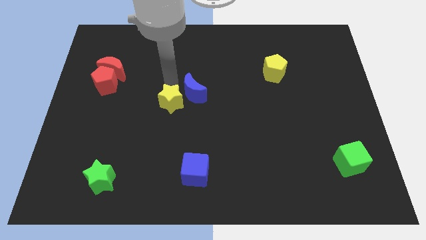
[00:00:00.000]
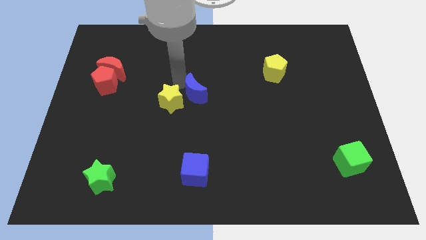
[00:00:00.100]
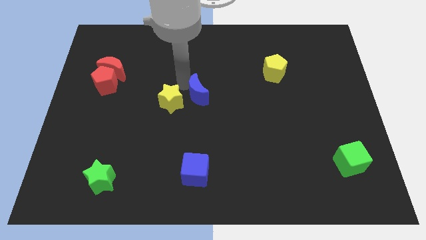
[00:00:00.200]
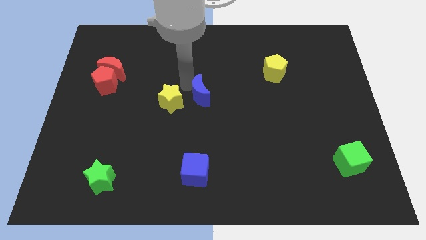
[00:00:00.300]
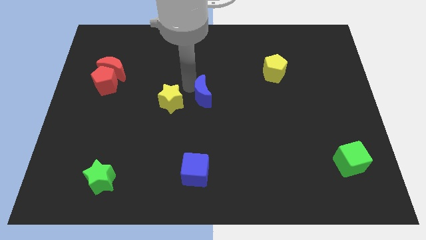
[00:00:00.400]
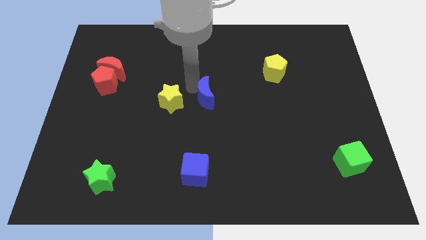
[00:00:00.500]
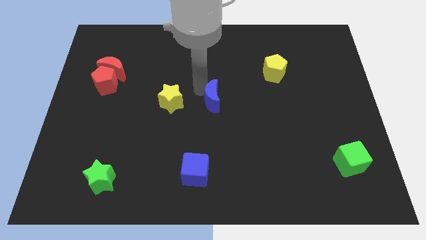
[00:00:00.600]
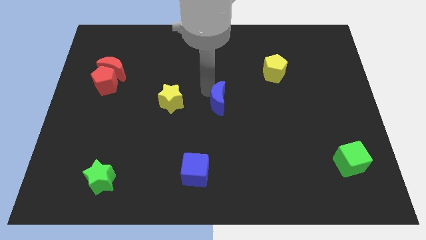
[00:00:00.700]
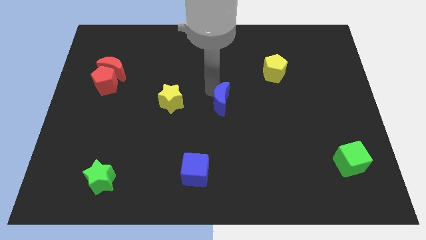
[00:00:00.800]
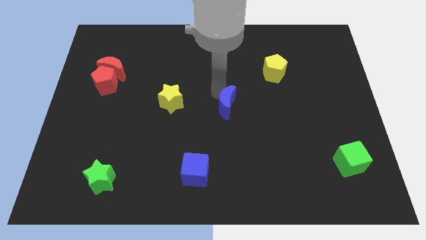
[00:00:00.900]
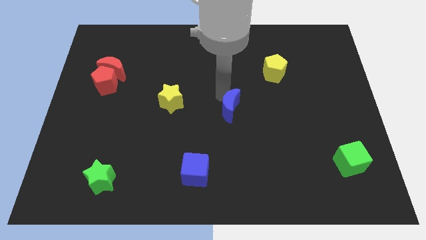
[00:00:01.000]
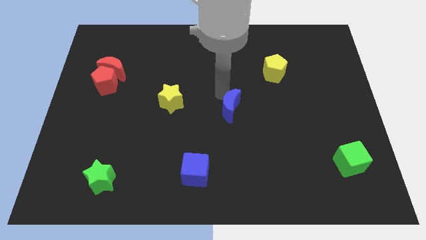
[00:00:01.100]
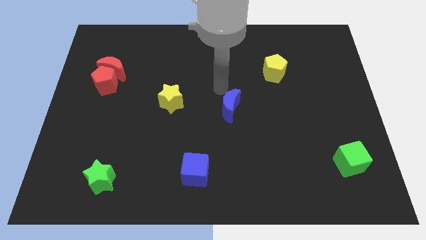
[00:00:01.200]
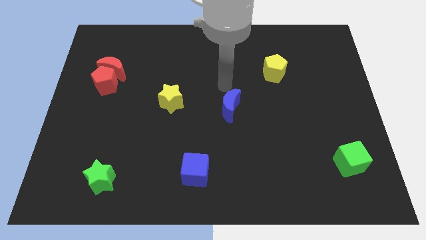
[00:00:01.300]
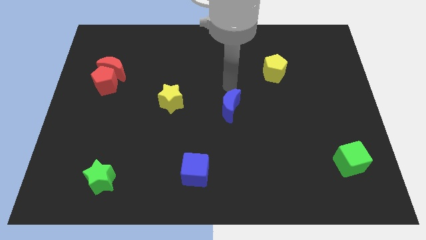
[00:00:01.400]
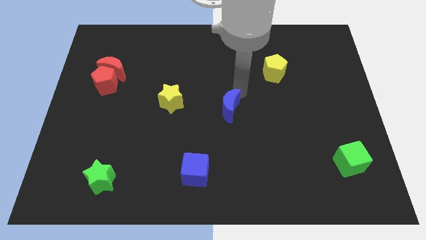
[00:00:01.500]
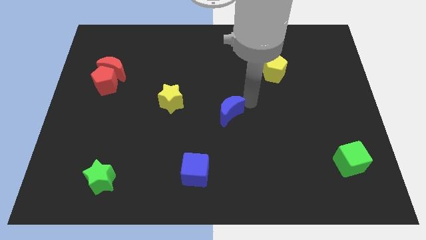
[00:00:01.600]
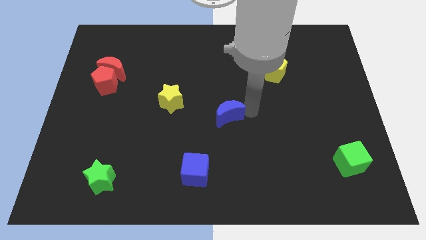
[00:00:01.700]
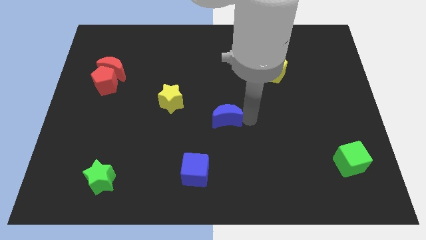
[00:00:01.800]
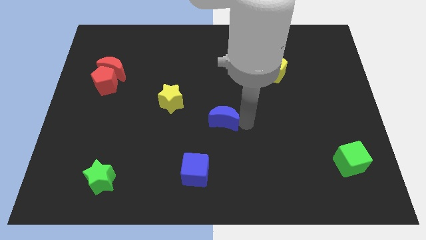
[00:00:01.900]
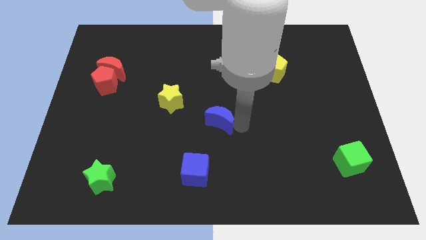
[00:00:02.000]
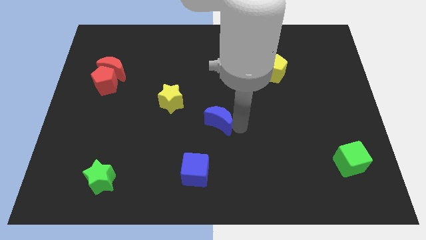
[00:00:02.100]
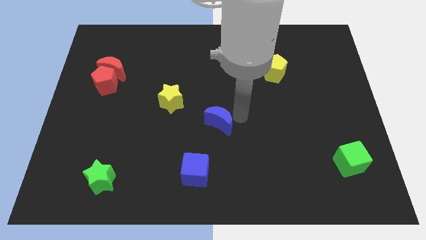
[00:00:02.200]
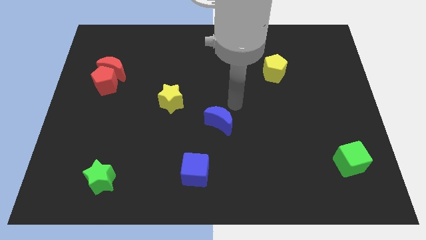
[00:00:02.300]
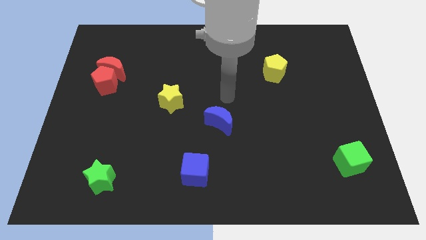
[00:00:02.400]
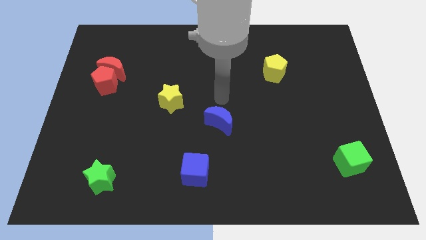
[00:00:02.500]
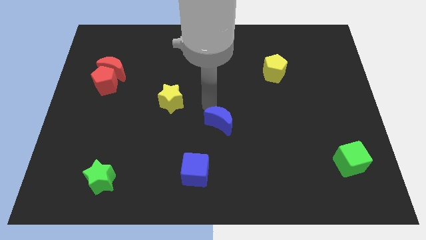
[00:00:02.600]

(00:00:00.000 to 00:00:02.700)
drag the blue moon to the center of the board

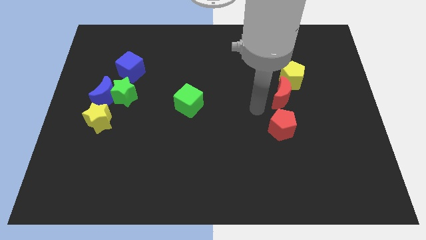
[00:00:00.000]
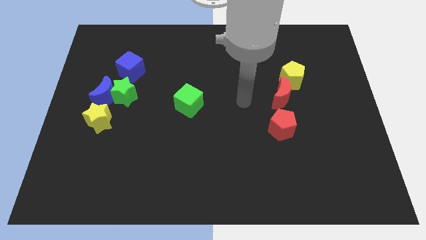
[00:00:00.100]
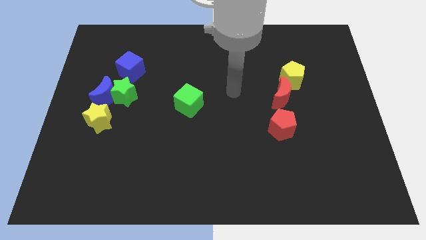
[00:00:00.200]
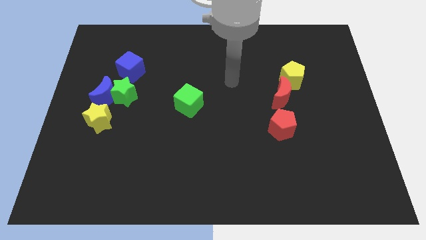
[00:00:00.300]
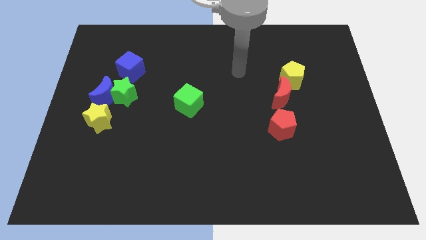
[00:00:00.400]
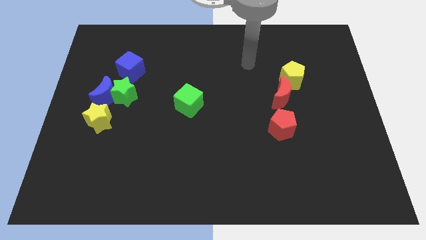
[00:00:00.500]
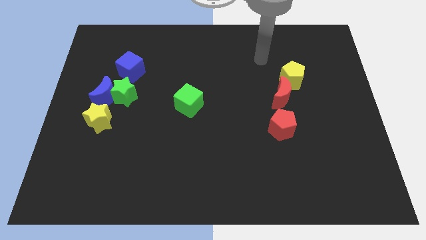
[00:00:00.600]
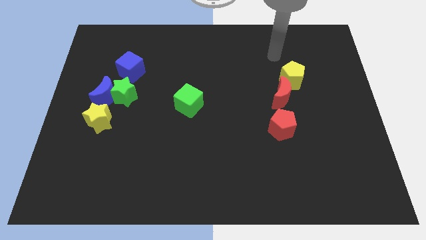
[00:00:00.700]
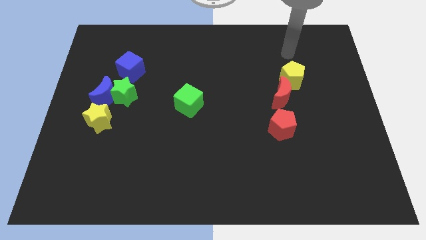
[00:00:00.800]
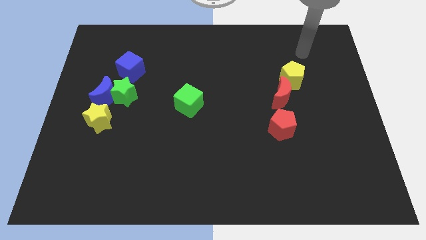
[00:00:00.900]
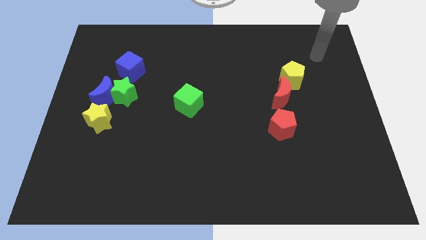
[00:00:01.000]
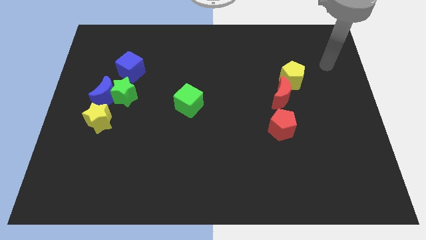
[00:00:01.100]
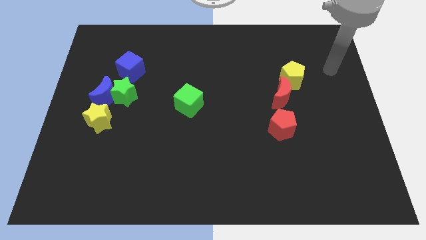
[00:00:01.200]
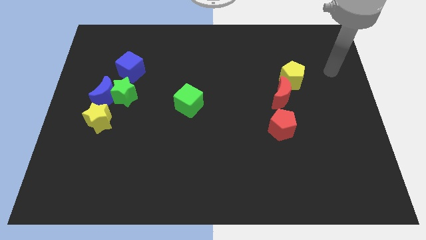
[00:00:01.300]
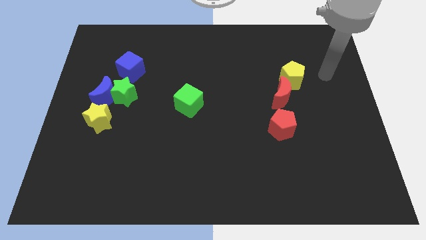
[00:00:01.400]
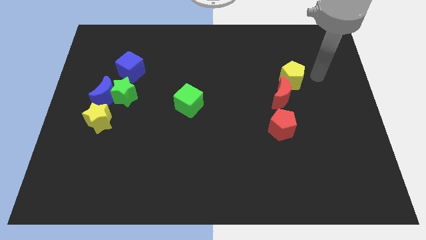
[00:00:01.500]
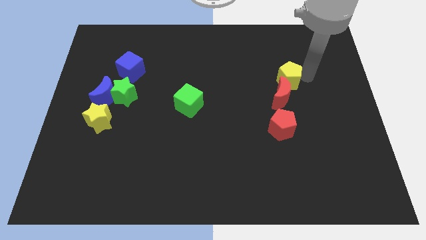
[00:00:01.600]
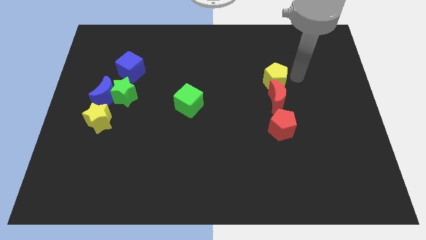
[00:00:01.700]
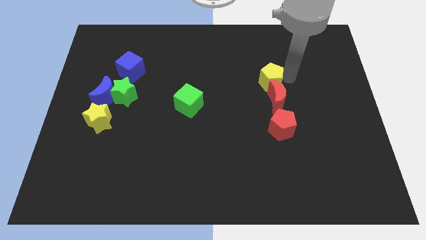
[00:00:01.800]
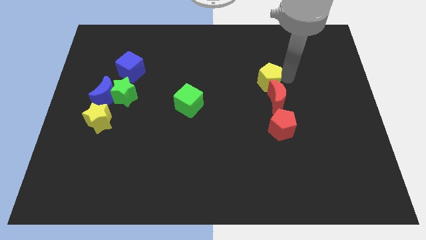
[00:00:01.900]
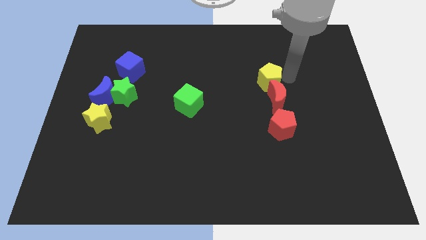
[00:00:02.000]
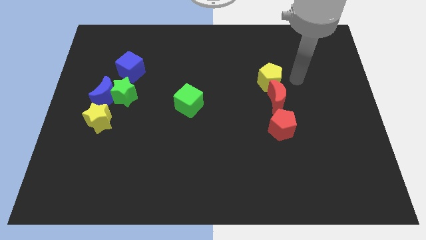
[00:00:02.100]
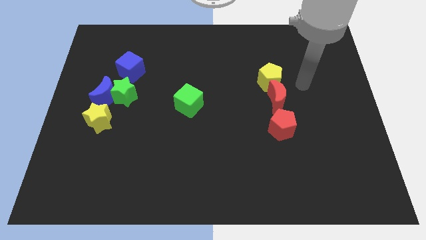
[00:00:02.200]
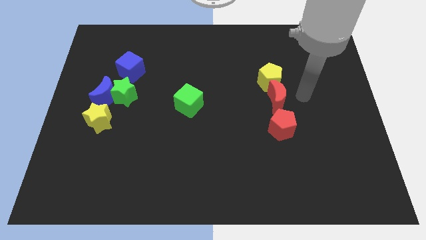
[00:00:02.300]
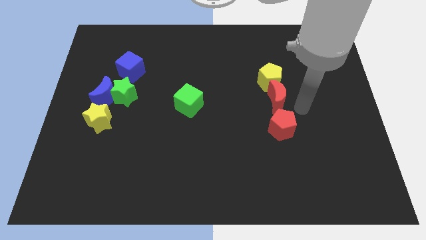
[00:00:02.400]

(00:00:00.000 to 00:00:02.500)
move the yellow pentagon to the top of the red crescent

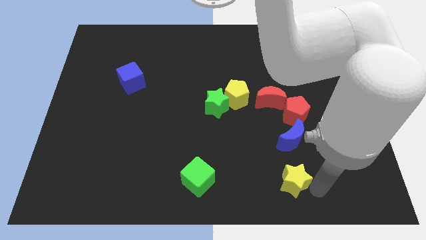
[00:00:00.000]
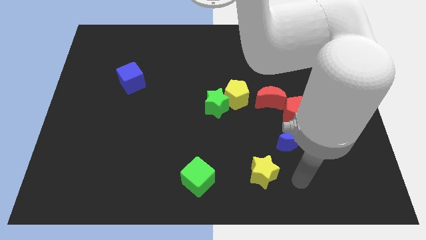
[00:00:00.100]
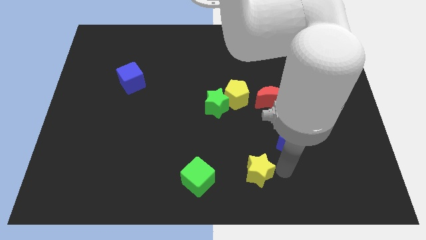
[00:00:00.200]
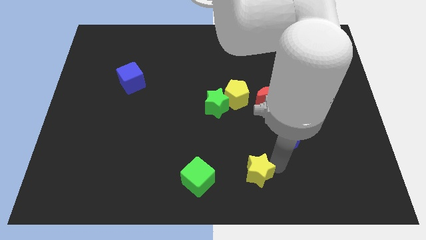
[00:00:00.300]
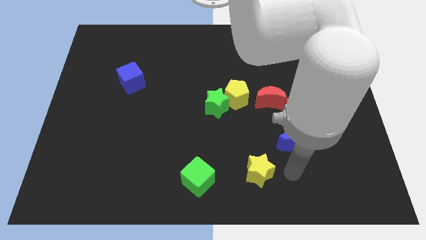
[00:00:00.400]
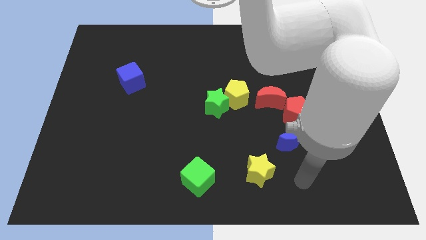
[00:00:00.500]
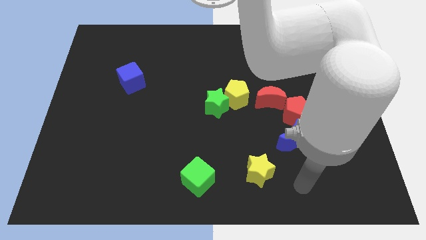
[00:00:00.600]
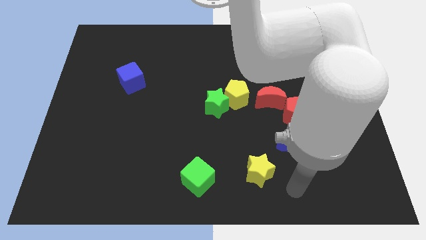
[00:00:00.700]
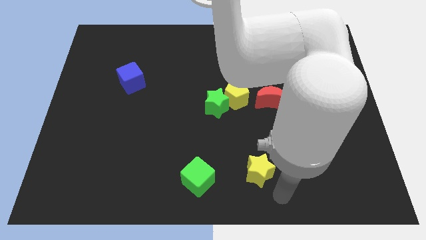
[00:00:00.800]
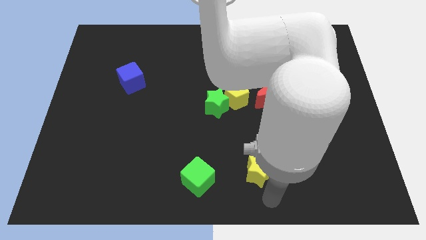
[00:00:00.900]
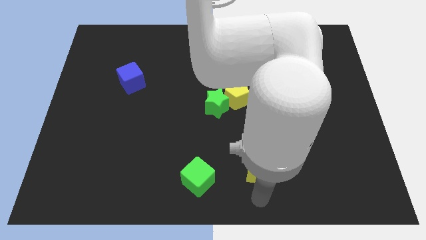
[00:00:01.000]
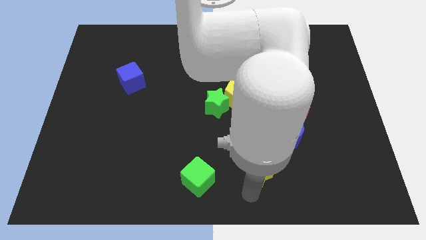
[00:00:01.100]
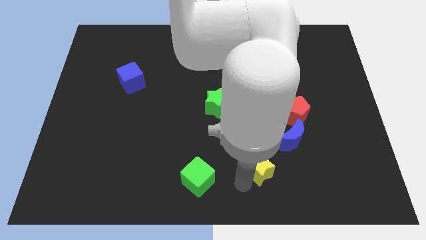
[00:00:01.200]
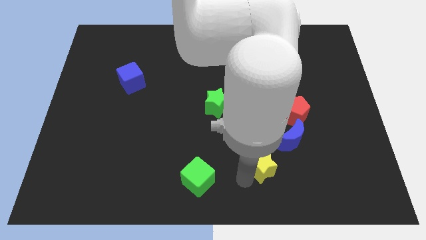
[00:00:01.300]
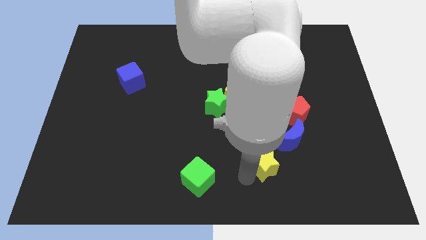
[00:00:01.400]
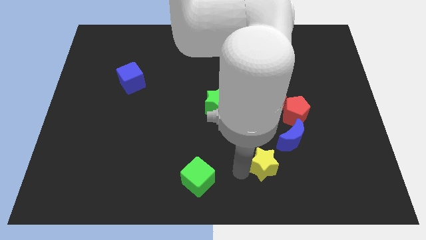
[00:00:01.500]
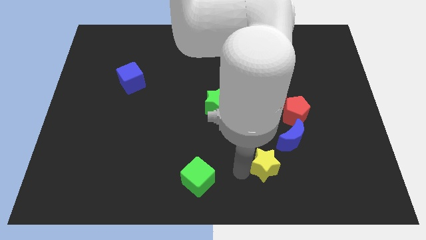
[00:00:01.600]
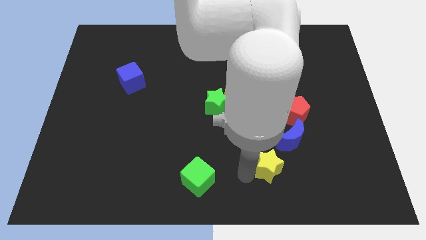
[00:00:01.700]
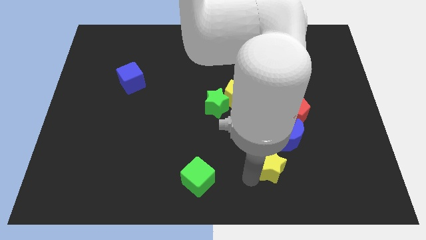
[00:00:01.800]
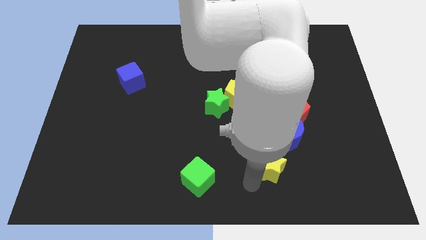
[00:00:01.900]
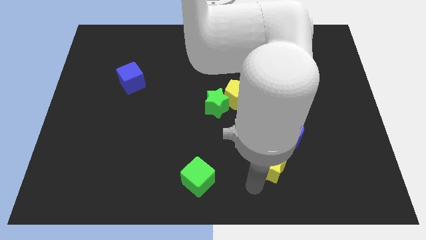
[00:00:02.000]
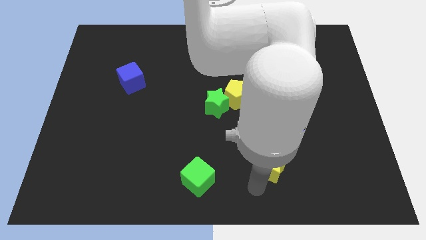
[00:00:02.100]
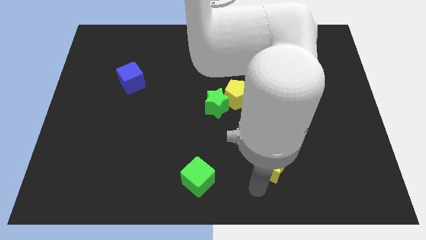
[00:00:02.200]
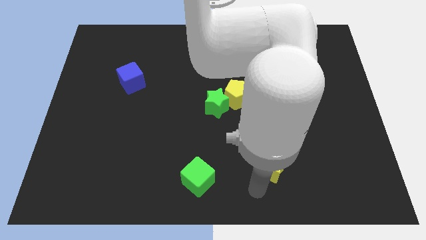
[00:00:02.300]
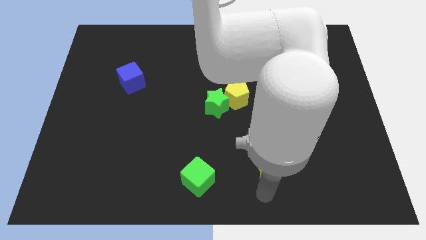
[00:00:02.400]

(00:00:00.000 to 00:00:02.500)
push the yellow star to the bottom left of the blue crescent

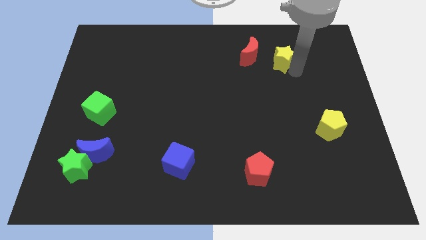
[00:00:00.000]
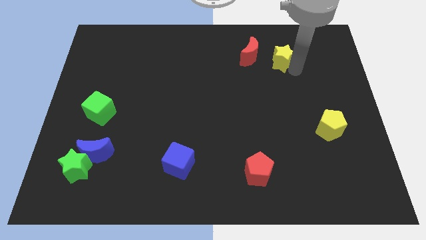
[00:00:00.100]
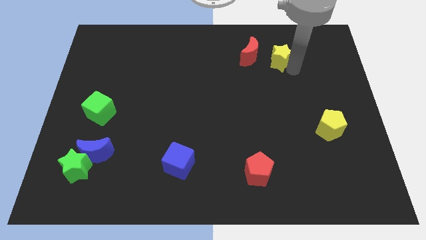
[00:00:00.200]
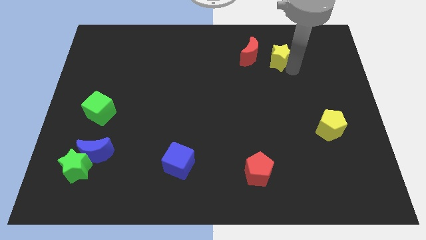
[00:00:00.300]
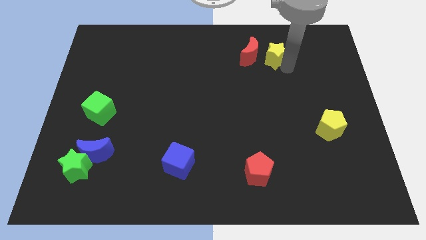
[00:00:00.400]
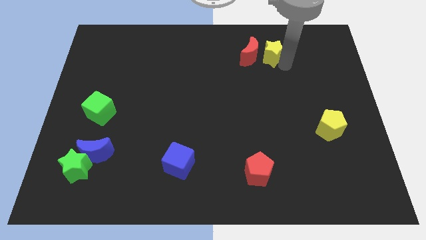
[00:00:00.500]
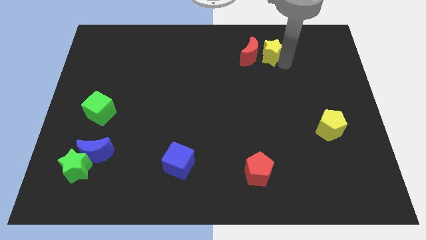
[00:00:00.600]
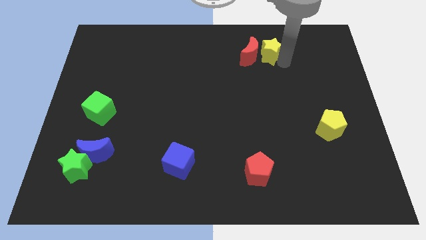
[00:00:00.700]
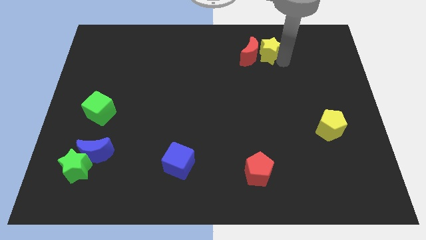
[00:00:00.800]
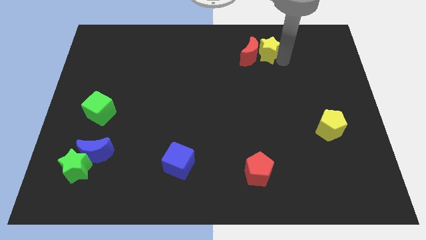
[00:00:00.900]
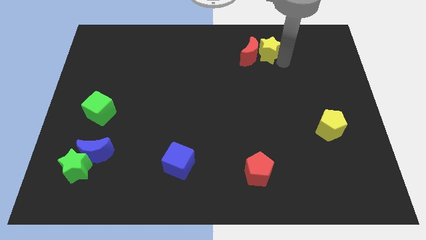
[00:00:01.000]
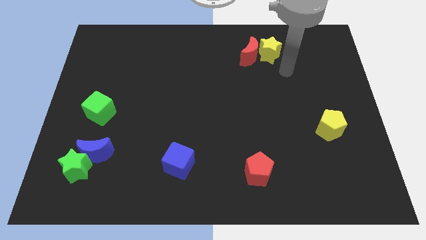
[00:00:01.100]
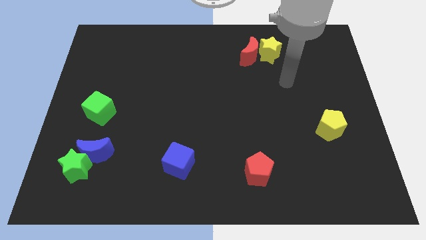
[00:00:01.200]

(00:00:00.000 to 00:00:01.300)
move the yellow star close to the right side of the red moon
